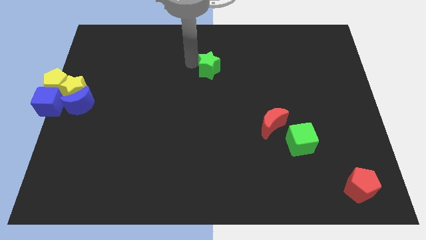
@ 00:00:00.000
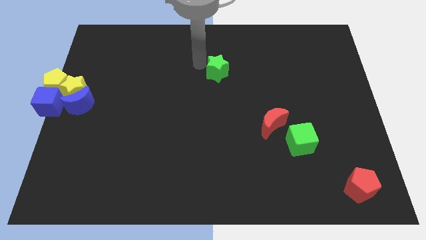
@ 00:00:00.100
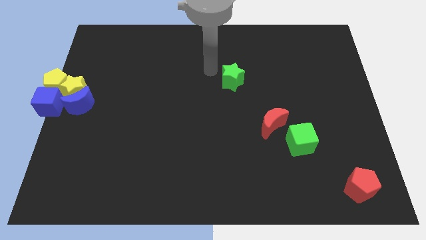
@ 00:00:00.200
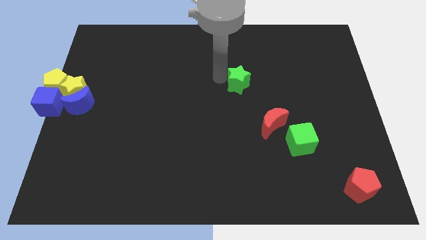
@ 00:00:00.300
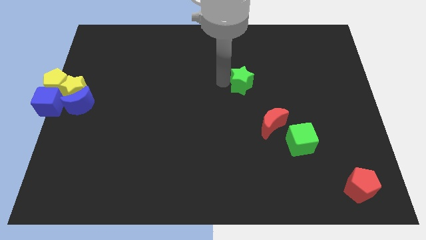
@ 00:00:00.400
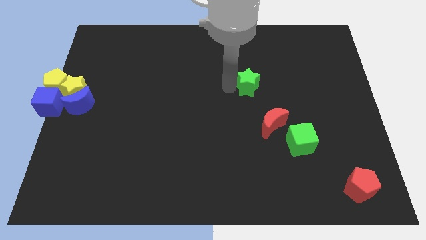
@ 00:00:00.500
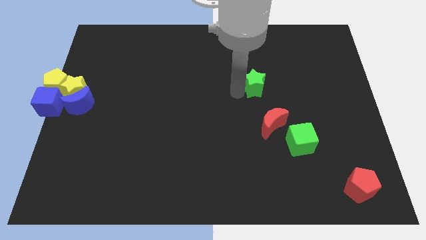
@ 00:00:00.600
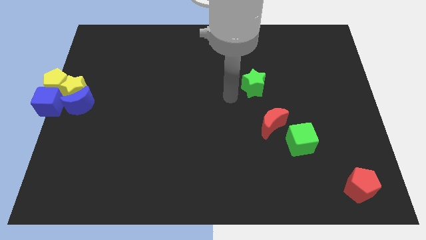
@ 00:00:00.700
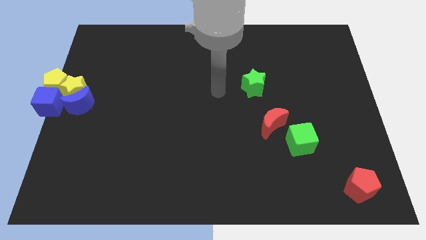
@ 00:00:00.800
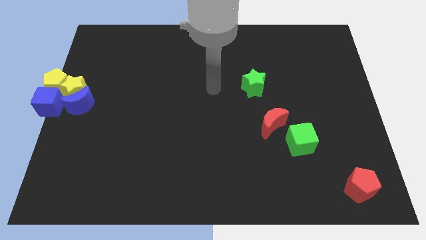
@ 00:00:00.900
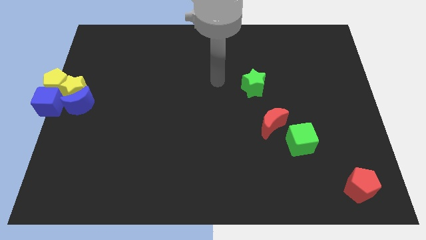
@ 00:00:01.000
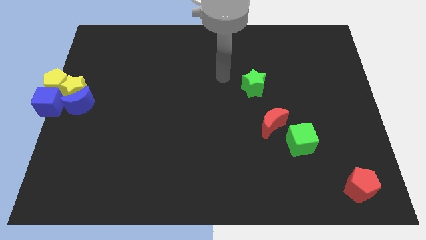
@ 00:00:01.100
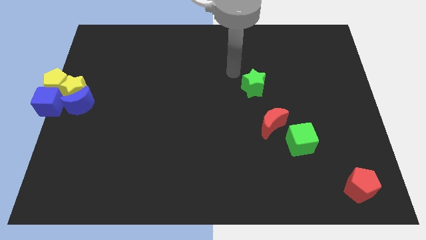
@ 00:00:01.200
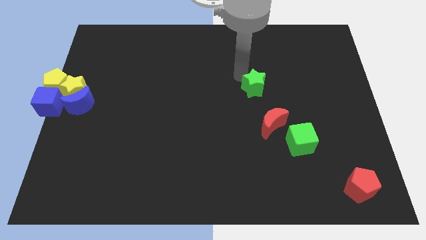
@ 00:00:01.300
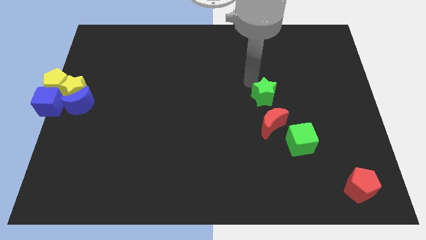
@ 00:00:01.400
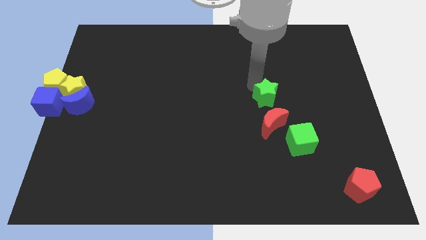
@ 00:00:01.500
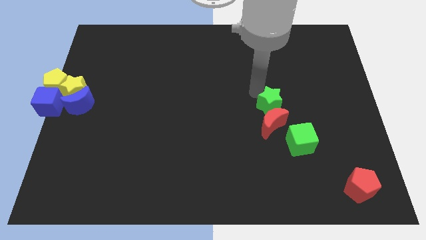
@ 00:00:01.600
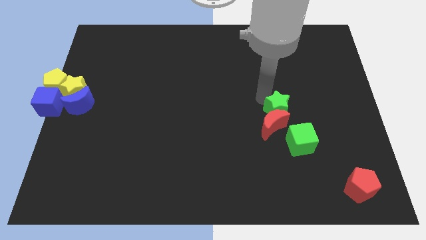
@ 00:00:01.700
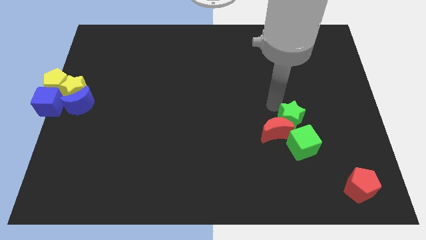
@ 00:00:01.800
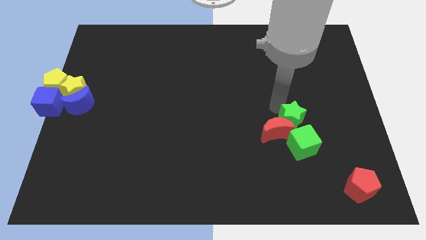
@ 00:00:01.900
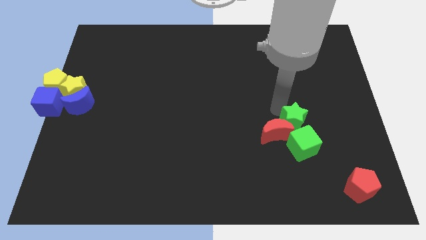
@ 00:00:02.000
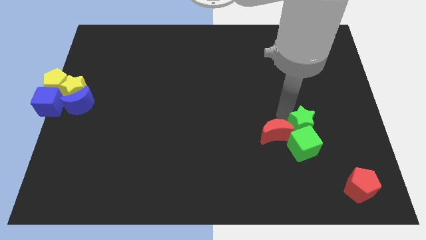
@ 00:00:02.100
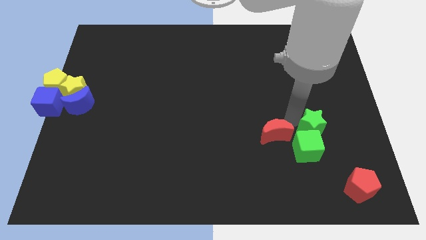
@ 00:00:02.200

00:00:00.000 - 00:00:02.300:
push the green star into the green cube

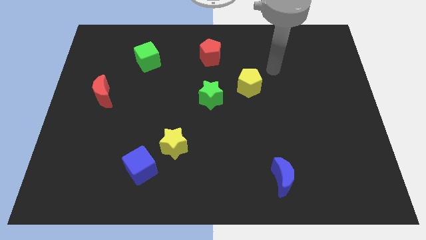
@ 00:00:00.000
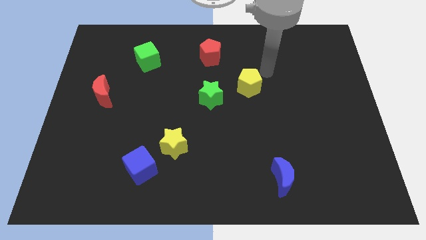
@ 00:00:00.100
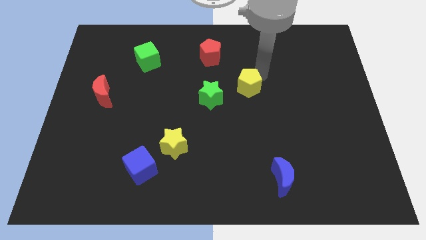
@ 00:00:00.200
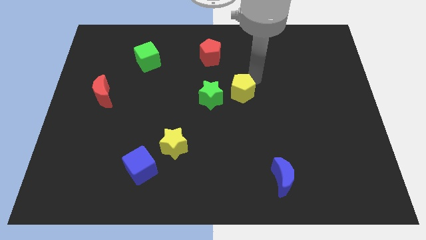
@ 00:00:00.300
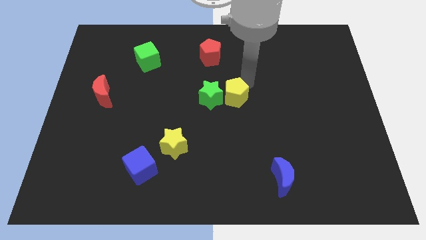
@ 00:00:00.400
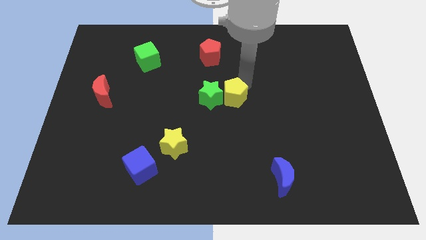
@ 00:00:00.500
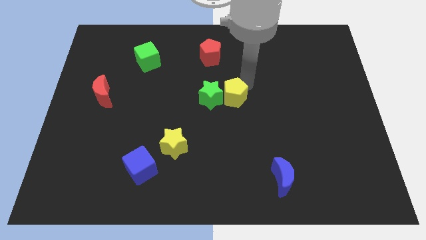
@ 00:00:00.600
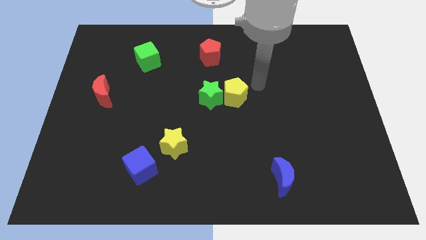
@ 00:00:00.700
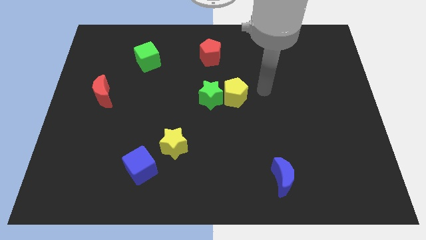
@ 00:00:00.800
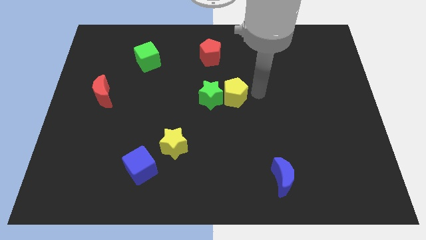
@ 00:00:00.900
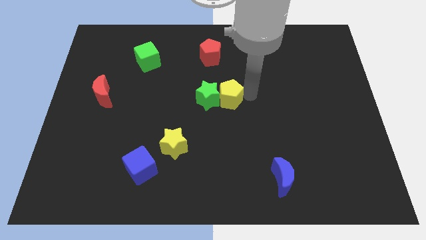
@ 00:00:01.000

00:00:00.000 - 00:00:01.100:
push the yellow pentagon to the right of the green star

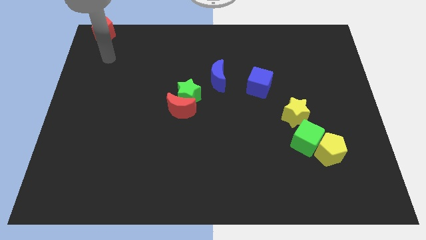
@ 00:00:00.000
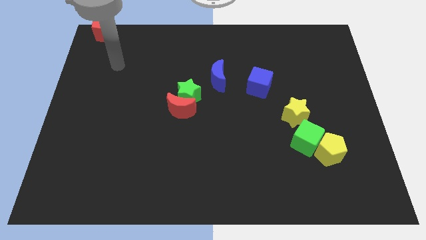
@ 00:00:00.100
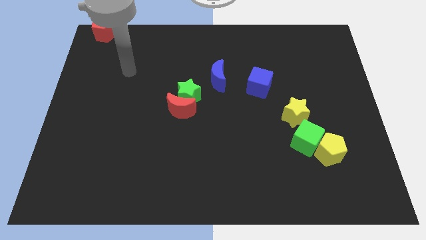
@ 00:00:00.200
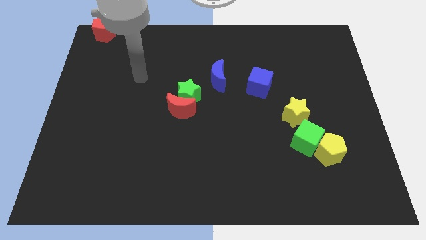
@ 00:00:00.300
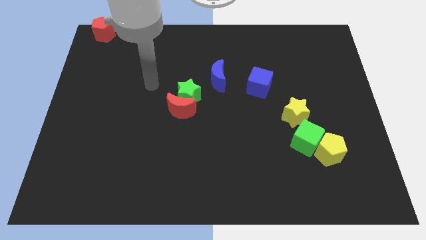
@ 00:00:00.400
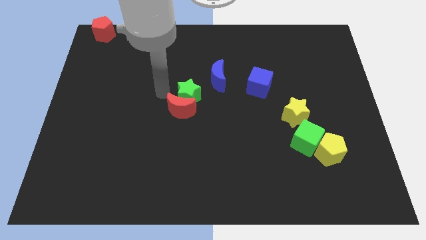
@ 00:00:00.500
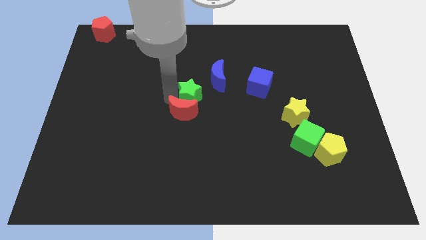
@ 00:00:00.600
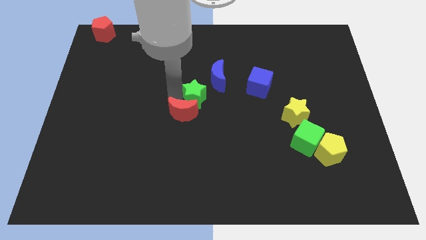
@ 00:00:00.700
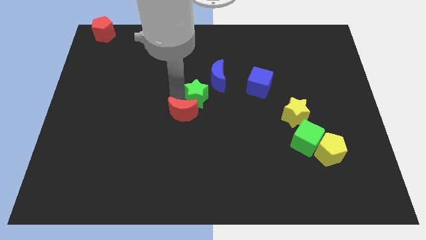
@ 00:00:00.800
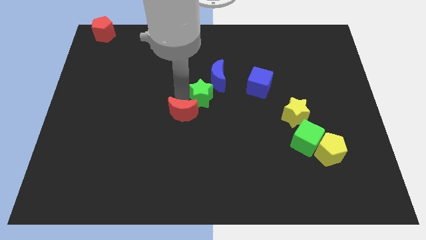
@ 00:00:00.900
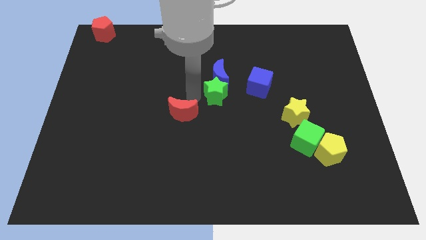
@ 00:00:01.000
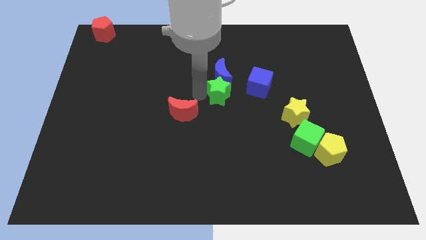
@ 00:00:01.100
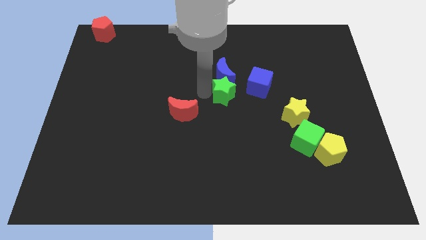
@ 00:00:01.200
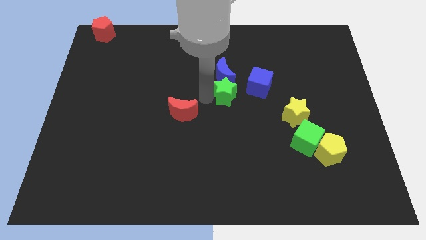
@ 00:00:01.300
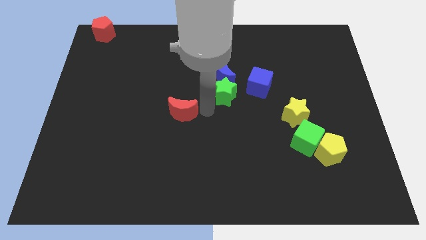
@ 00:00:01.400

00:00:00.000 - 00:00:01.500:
separate the green star and the red moon

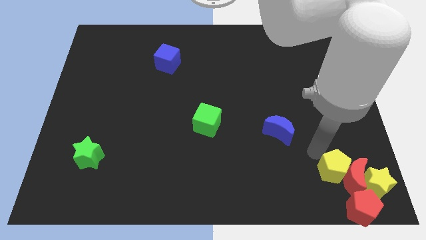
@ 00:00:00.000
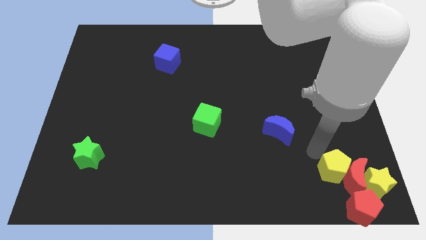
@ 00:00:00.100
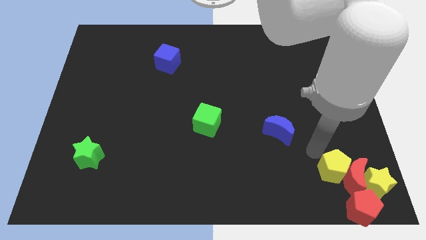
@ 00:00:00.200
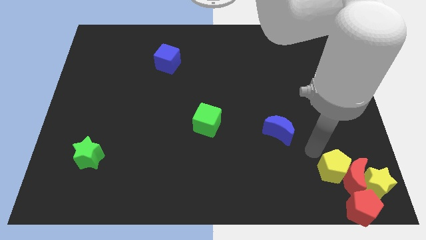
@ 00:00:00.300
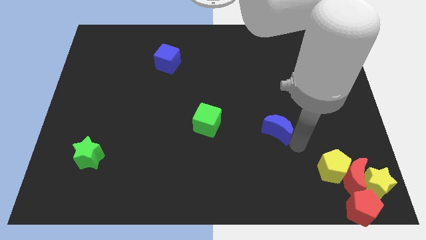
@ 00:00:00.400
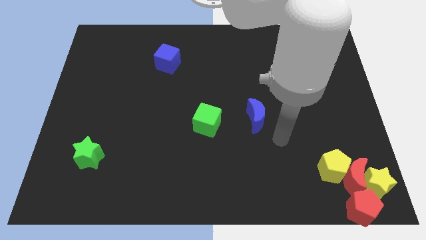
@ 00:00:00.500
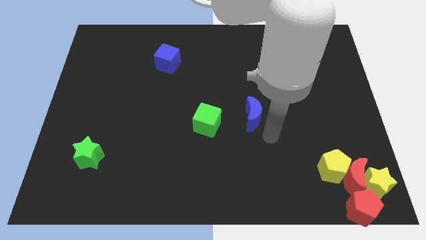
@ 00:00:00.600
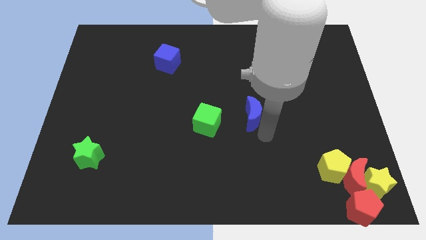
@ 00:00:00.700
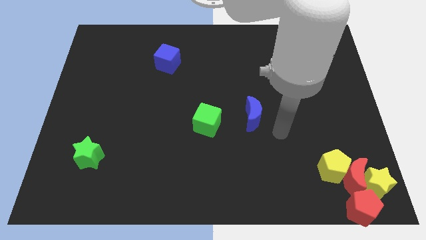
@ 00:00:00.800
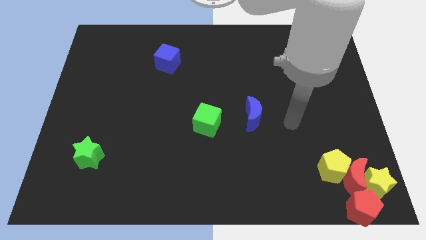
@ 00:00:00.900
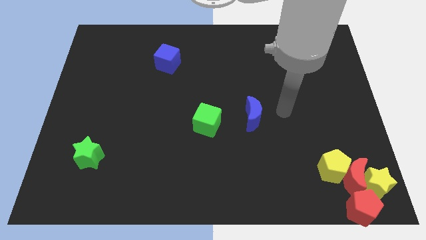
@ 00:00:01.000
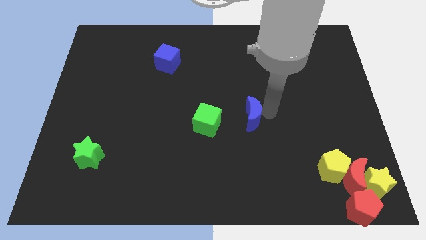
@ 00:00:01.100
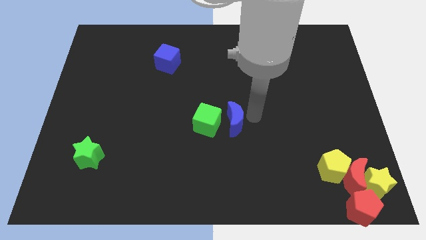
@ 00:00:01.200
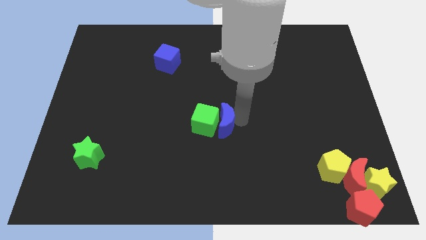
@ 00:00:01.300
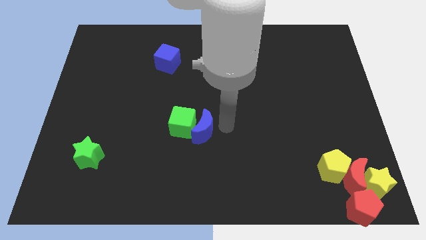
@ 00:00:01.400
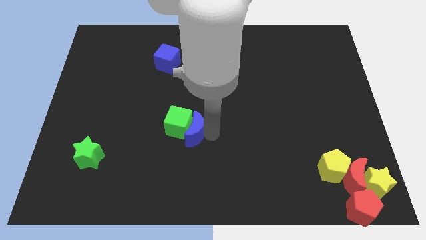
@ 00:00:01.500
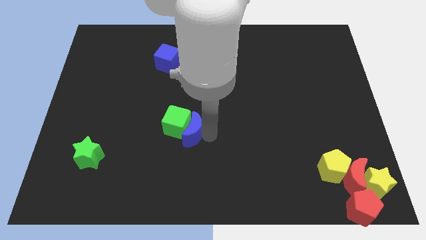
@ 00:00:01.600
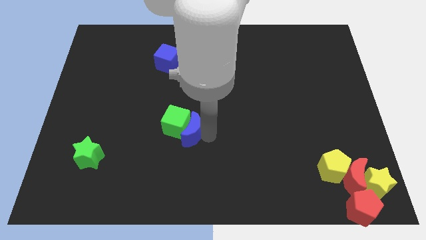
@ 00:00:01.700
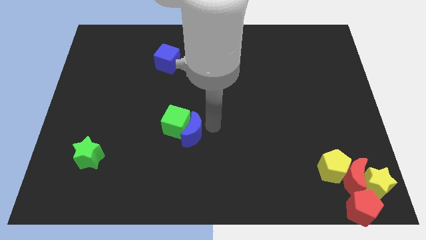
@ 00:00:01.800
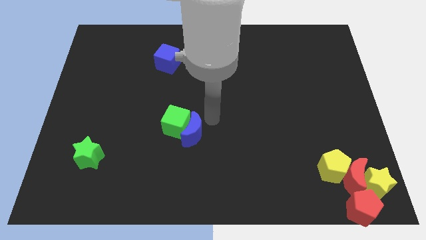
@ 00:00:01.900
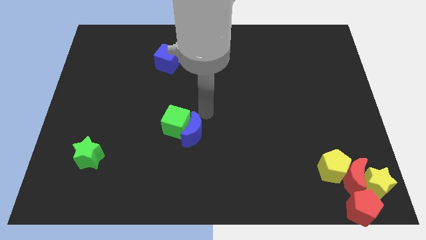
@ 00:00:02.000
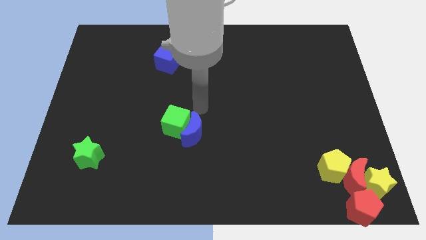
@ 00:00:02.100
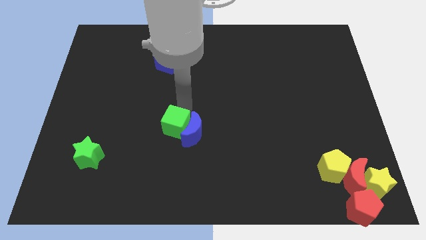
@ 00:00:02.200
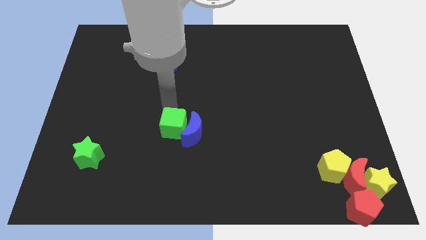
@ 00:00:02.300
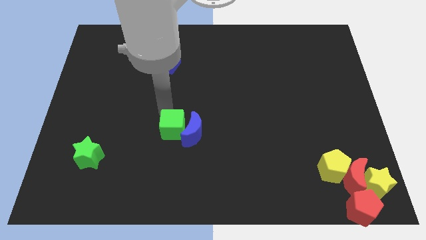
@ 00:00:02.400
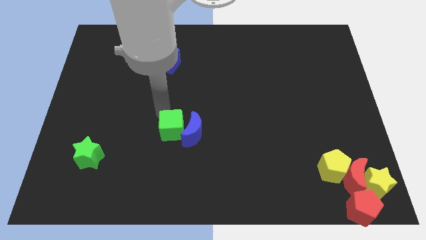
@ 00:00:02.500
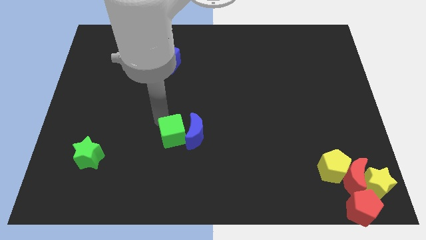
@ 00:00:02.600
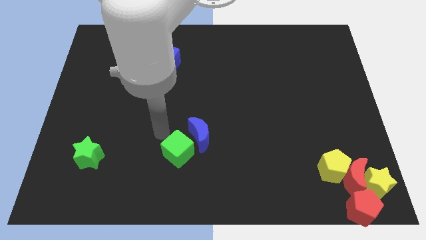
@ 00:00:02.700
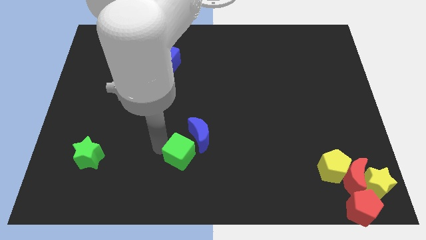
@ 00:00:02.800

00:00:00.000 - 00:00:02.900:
push the blue moon into green cube

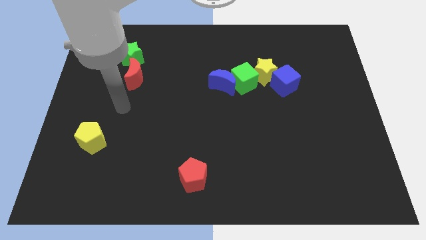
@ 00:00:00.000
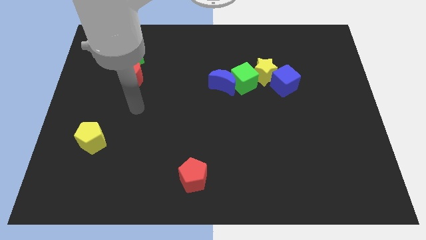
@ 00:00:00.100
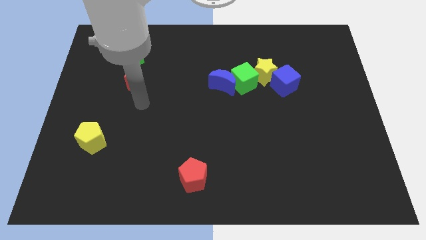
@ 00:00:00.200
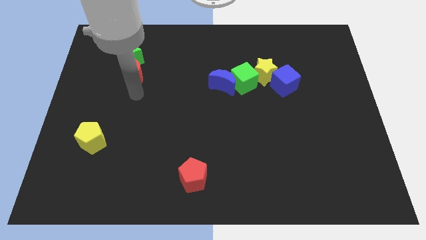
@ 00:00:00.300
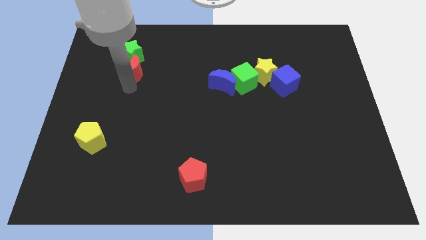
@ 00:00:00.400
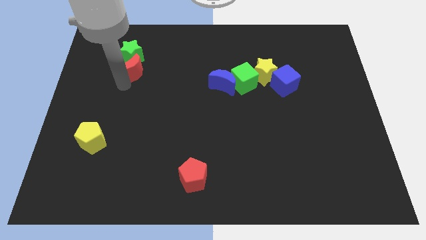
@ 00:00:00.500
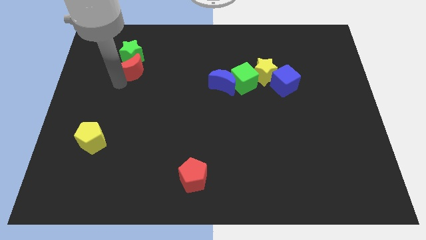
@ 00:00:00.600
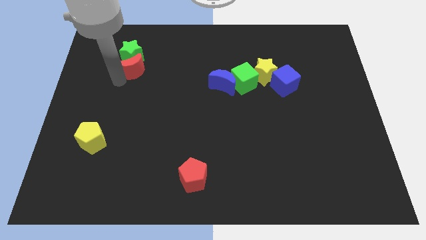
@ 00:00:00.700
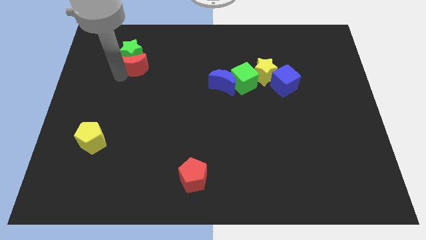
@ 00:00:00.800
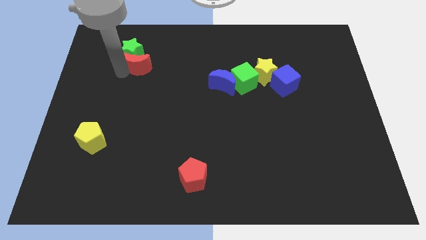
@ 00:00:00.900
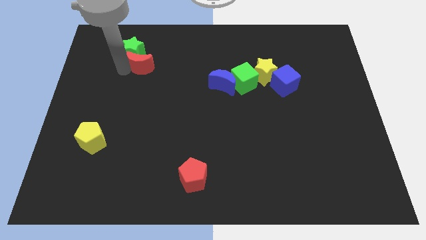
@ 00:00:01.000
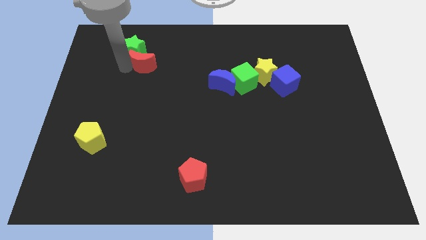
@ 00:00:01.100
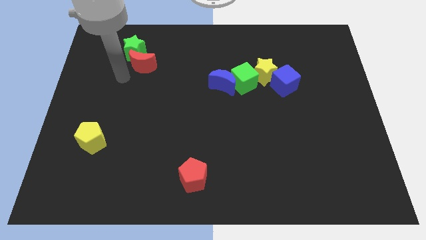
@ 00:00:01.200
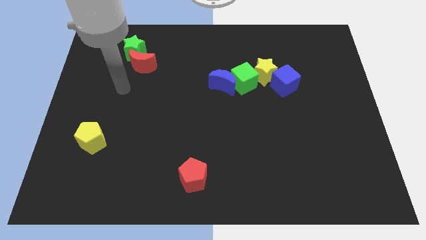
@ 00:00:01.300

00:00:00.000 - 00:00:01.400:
move red moon into green star
